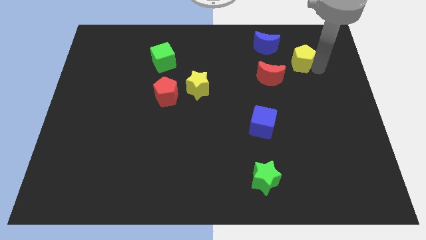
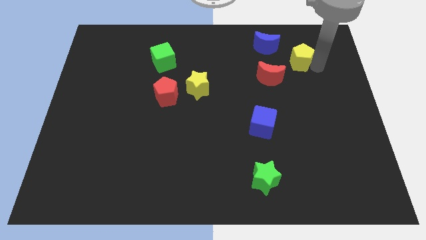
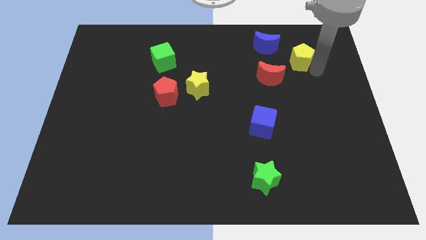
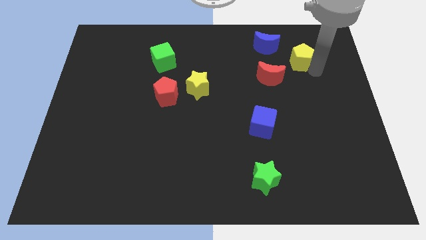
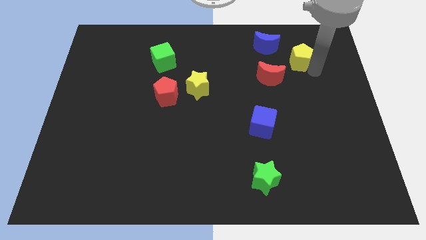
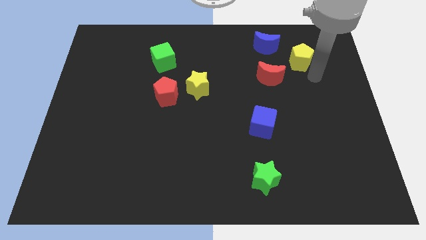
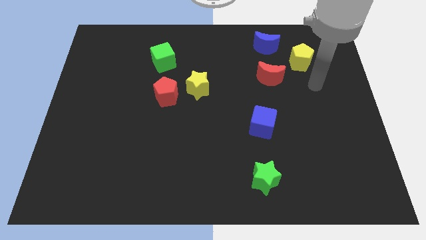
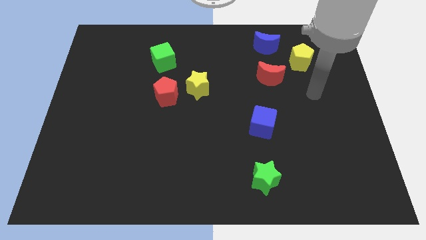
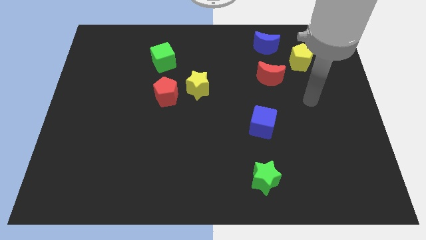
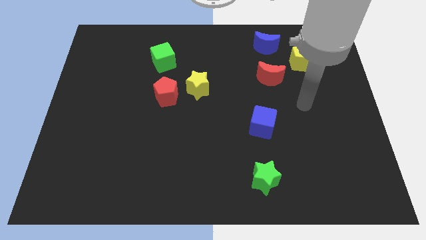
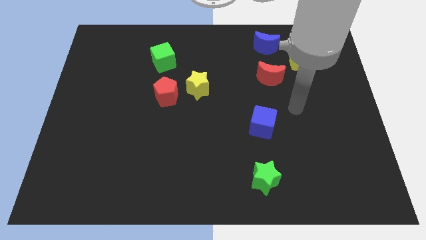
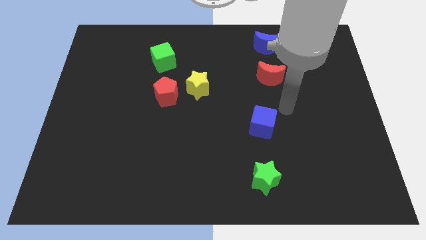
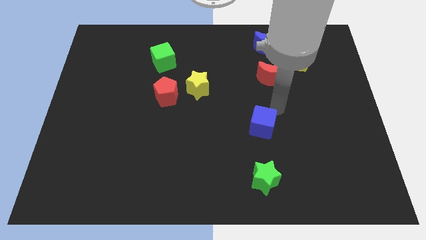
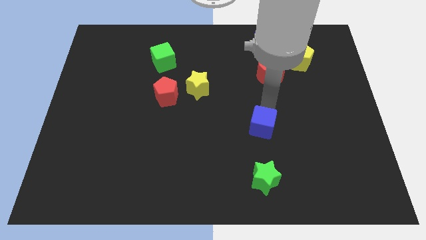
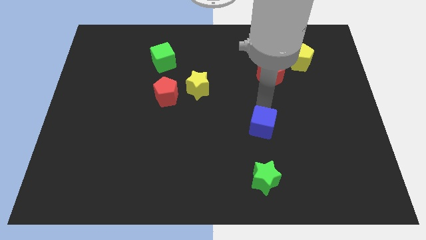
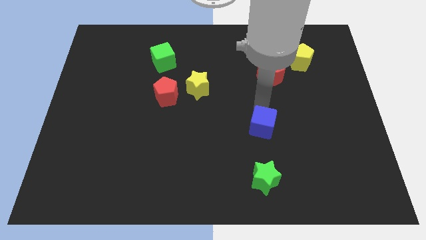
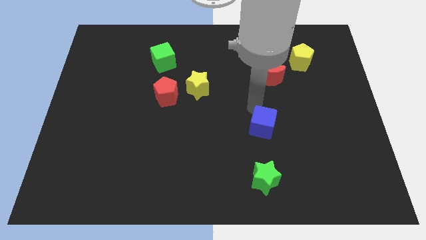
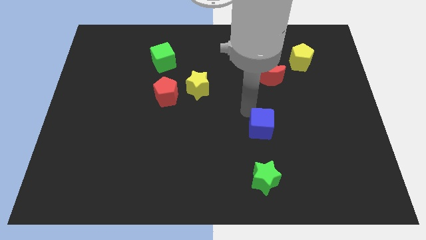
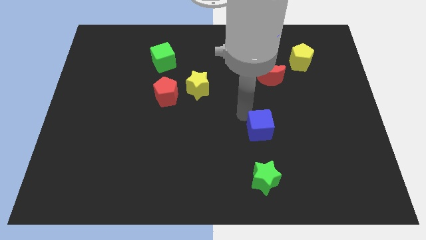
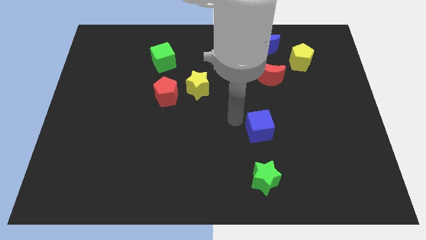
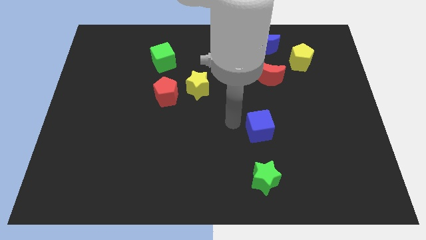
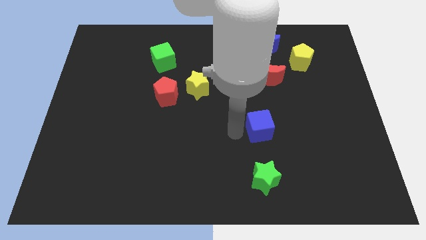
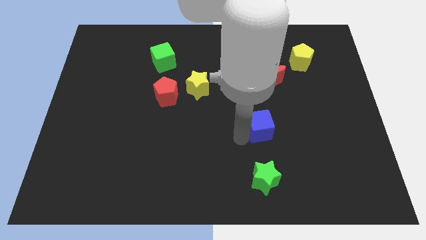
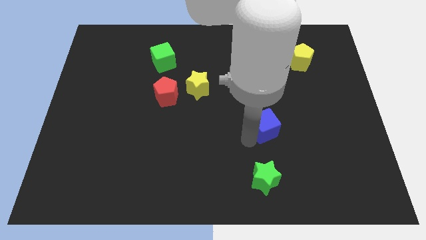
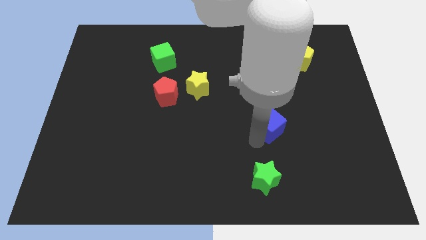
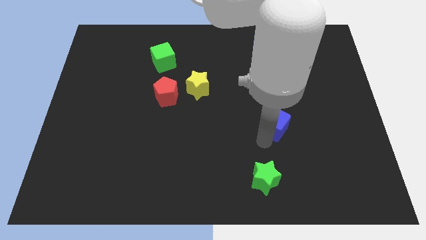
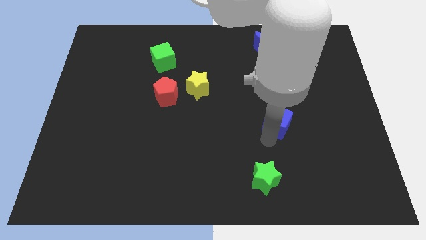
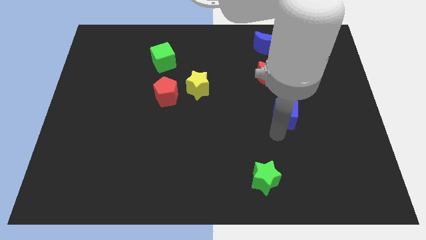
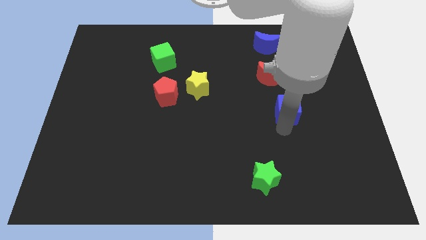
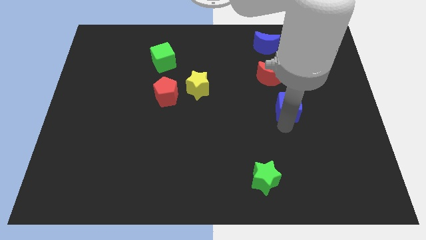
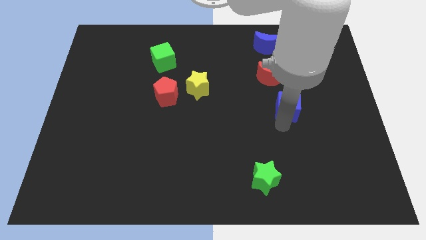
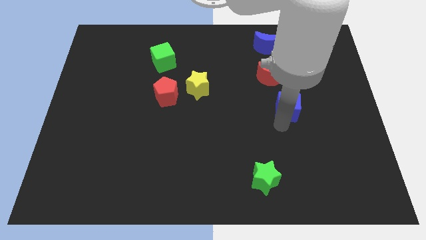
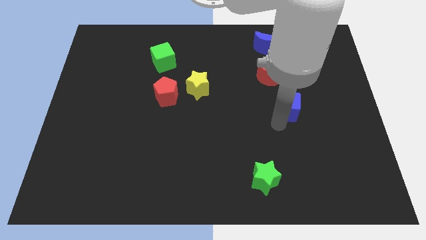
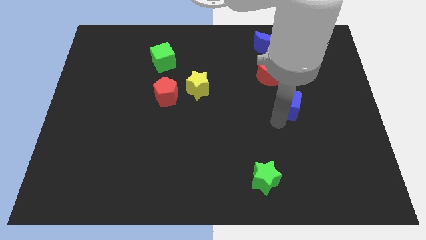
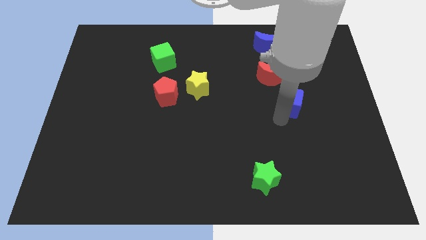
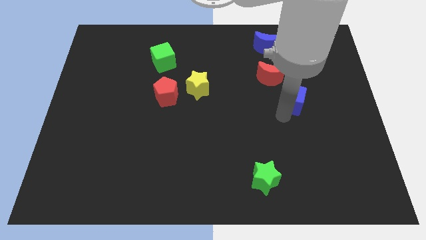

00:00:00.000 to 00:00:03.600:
move the blue cube upwards

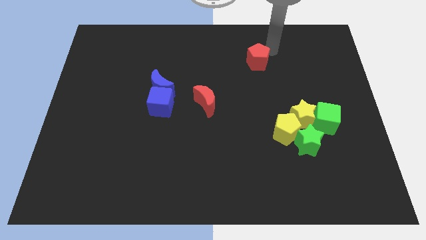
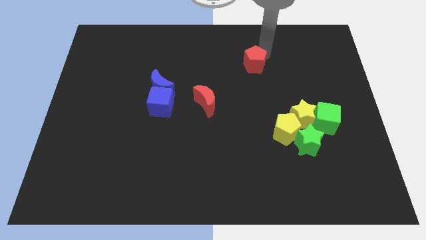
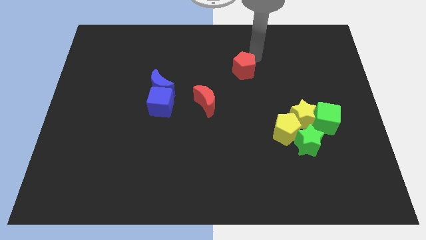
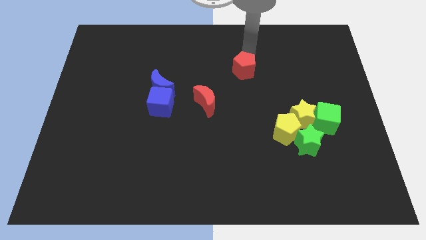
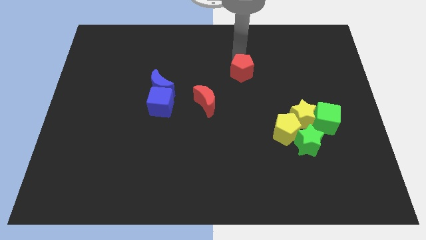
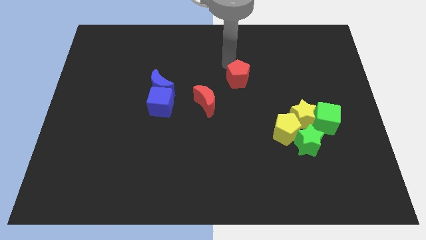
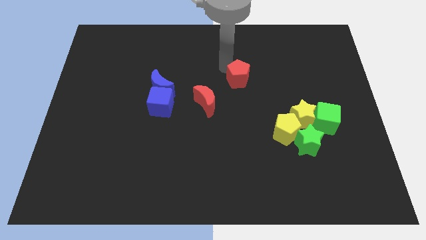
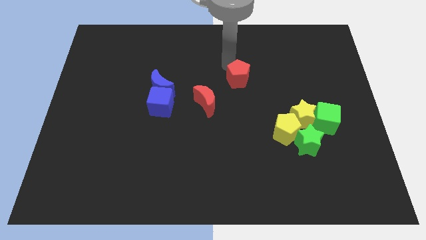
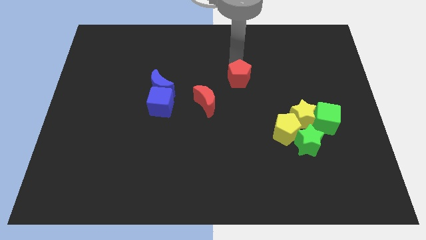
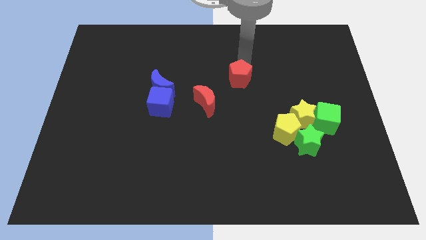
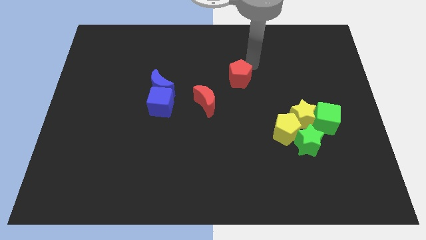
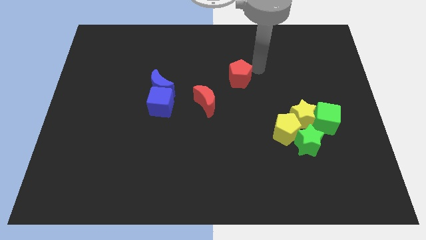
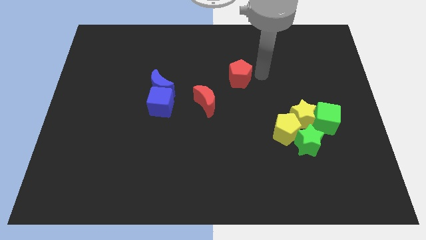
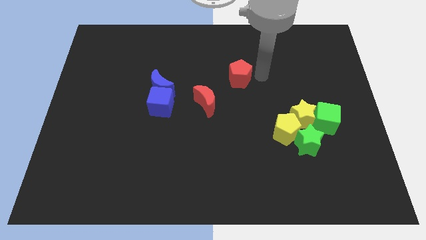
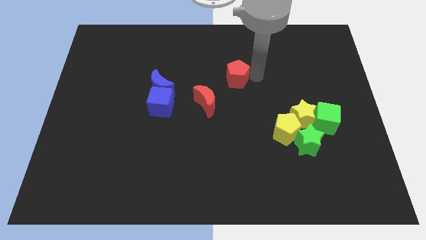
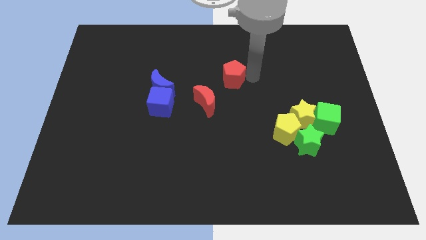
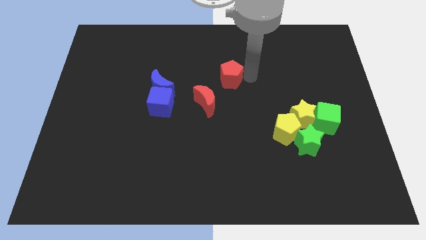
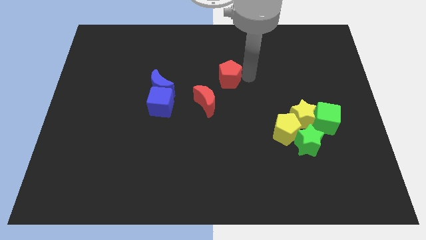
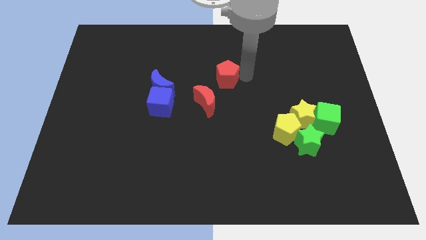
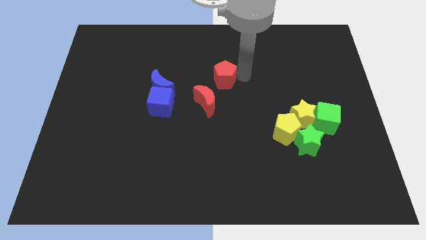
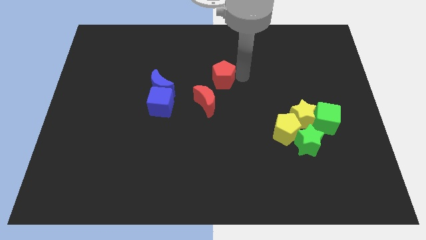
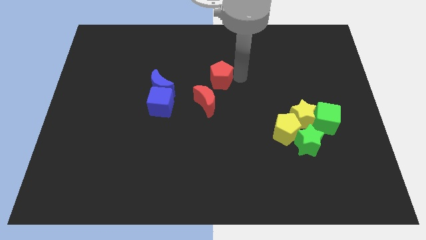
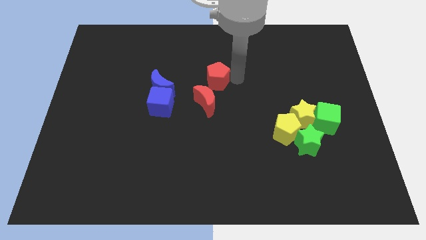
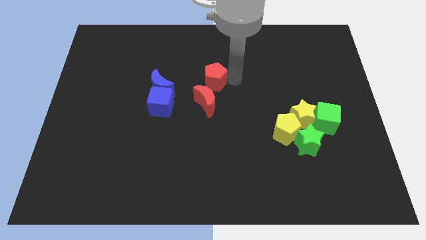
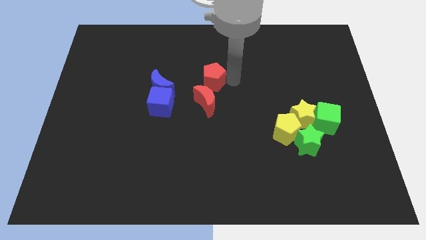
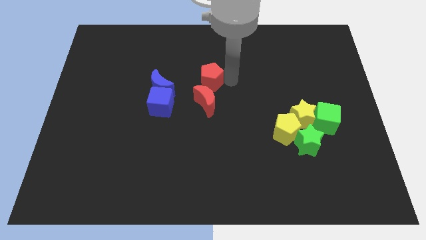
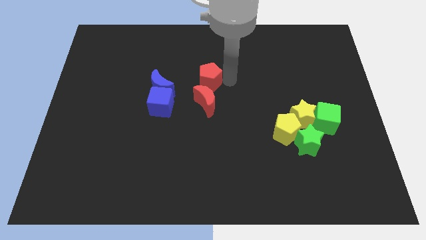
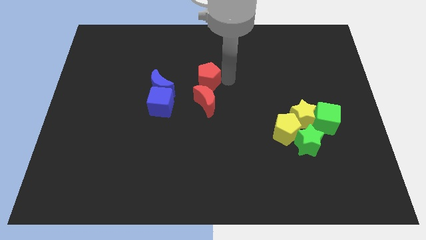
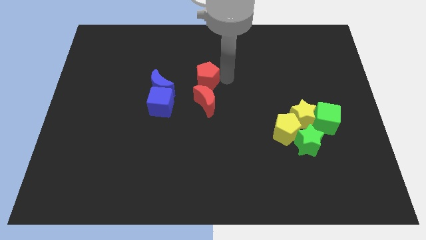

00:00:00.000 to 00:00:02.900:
place the red pentagon at the top of red moon

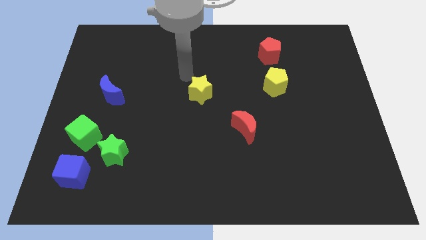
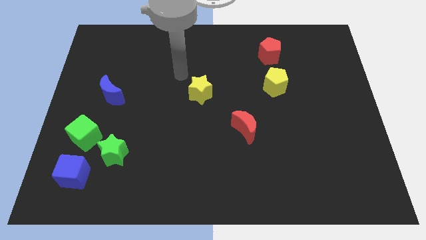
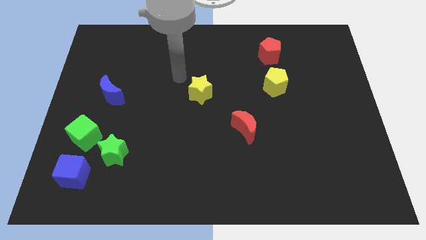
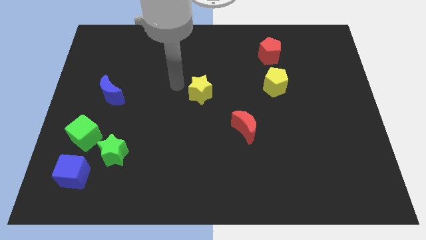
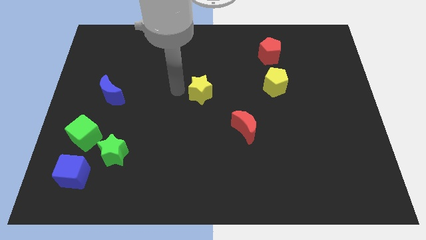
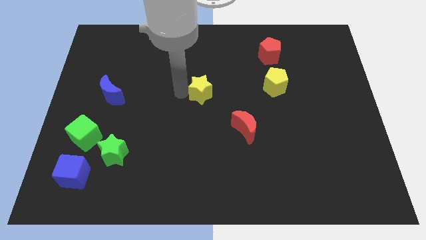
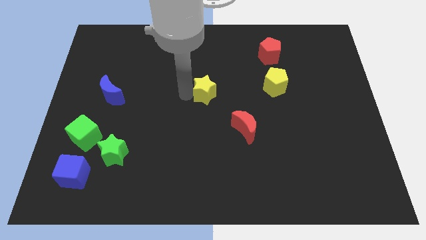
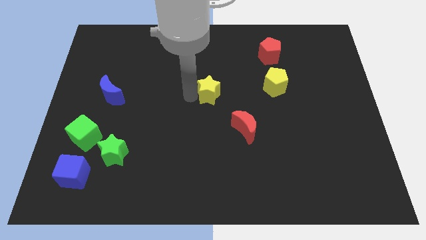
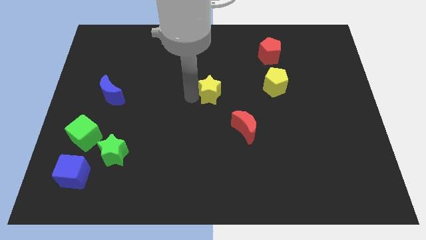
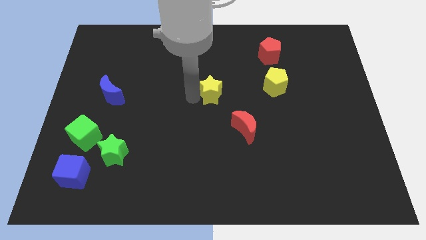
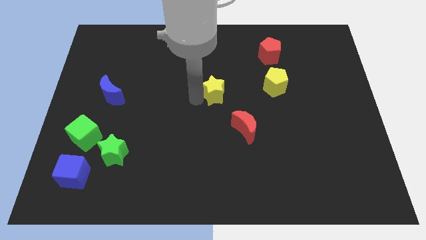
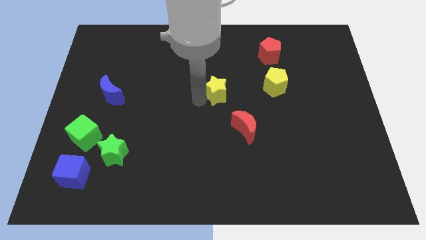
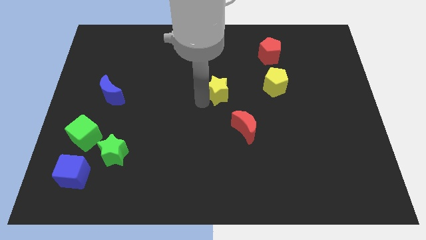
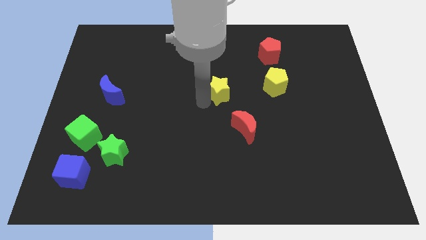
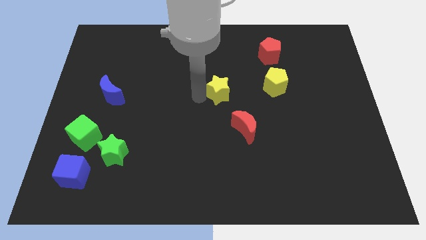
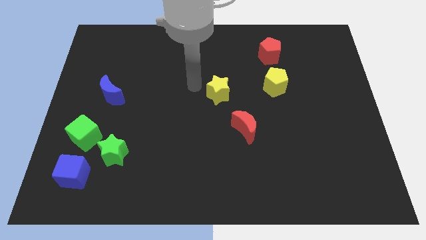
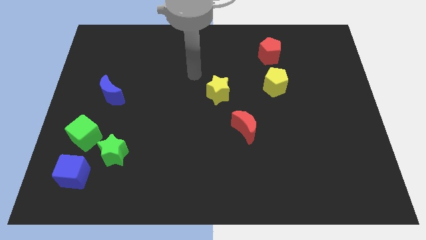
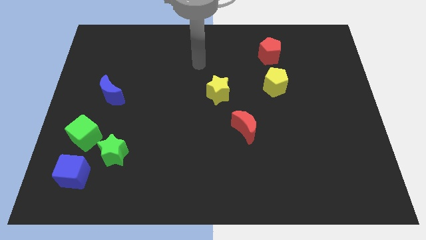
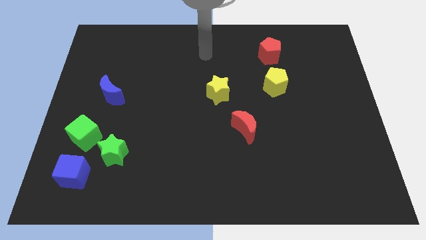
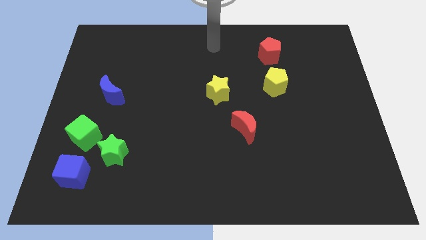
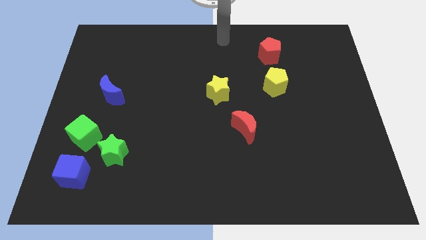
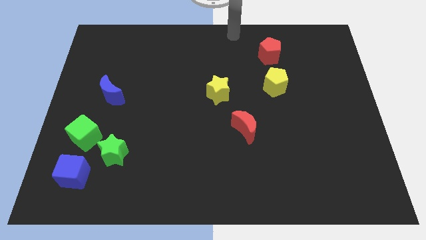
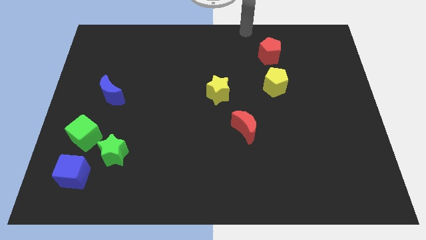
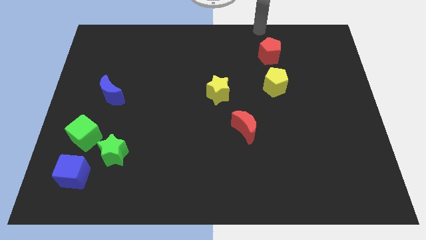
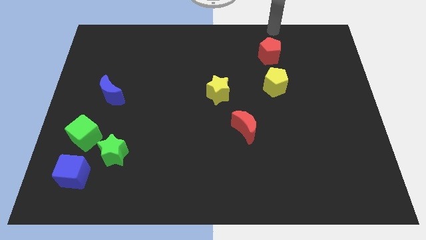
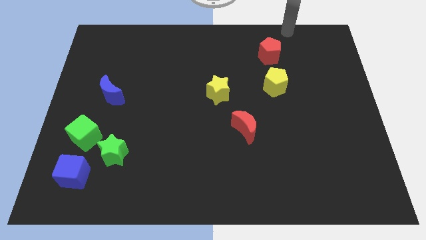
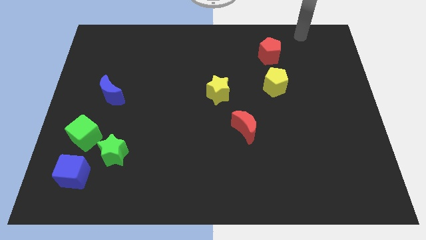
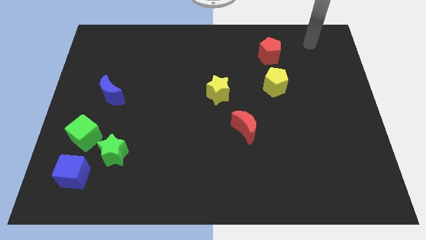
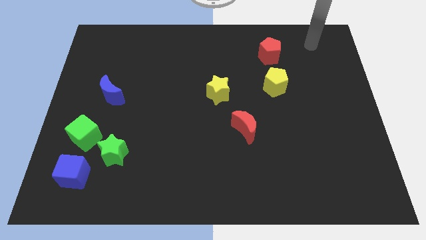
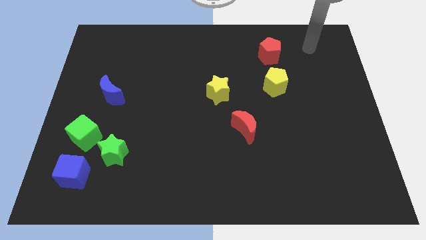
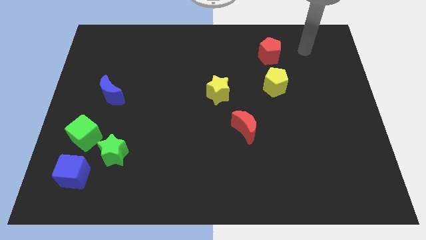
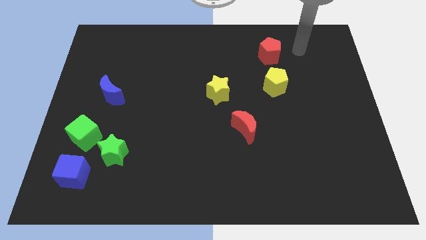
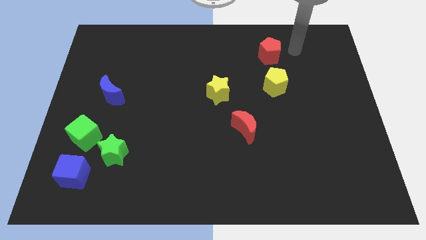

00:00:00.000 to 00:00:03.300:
push the yellow star towards the yellow pentagon
